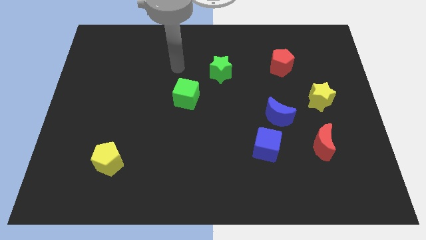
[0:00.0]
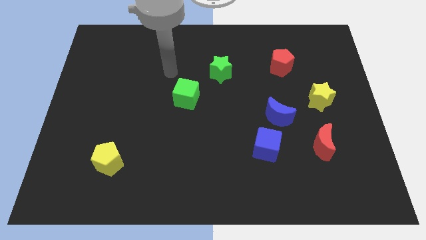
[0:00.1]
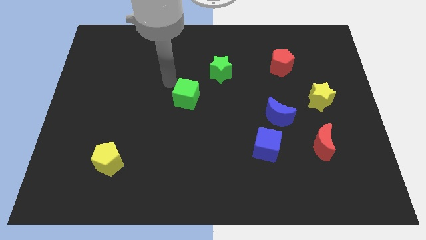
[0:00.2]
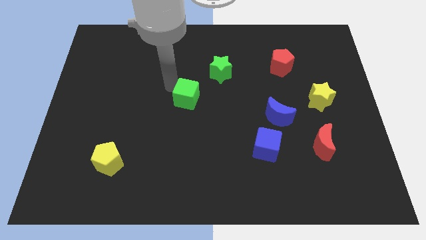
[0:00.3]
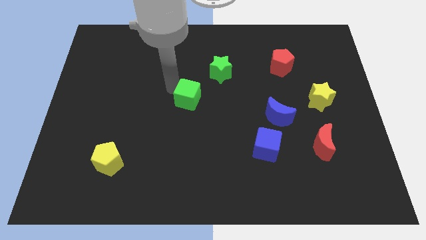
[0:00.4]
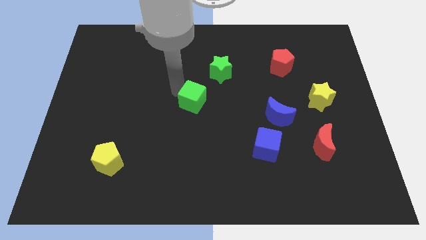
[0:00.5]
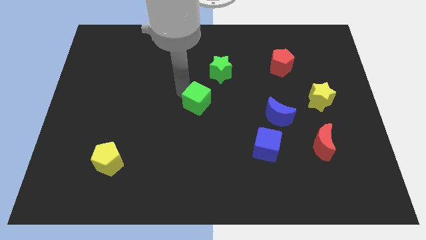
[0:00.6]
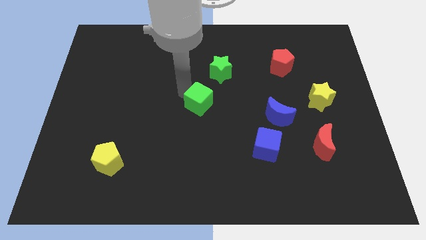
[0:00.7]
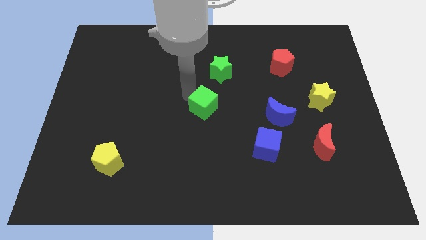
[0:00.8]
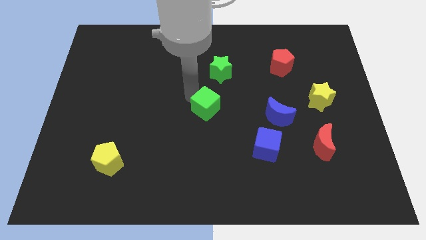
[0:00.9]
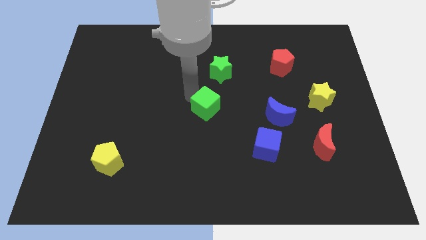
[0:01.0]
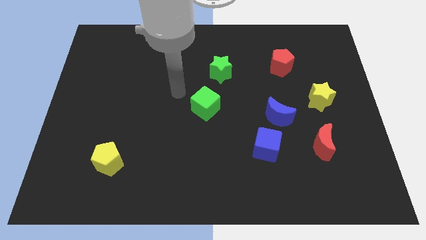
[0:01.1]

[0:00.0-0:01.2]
place the green cube left to the blue moon

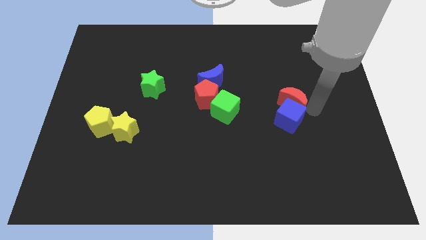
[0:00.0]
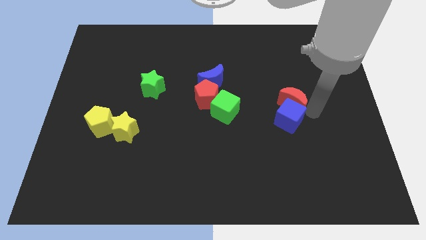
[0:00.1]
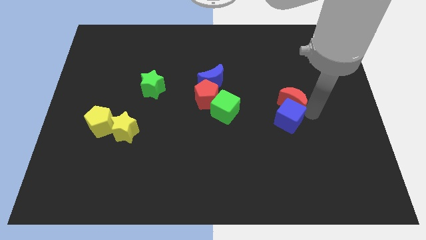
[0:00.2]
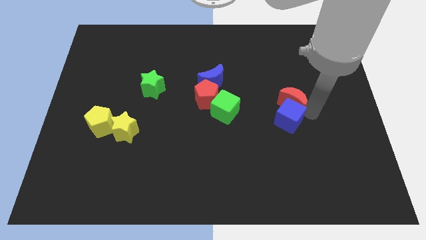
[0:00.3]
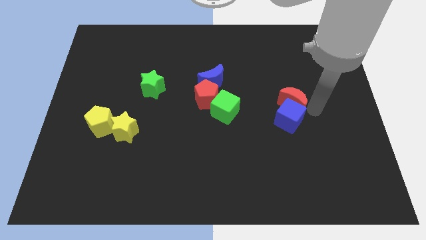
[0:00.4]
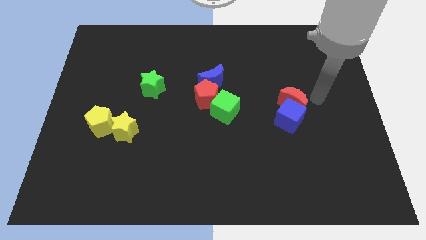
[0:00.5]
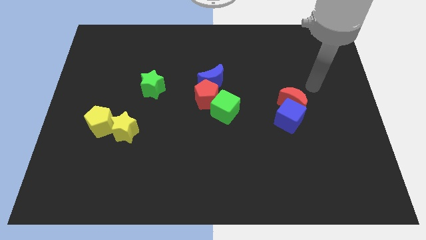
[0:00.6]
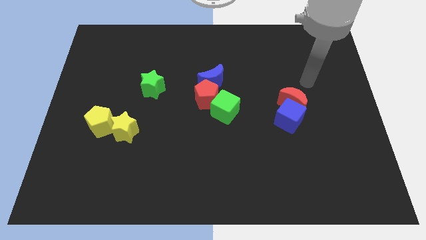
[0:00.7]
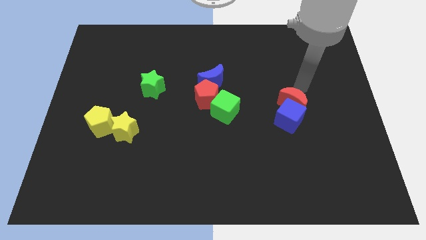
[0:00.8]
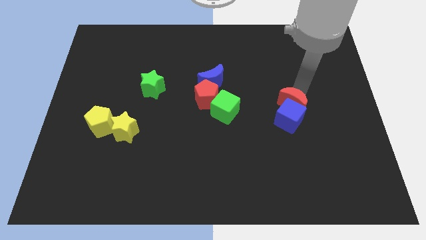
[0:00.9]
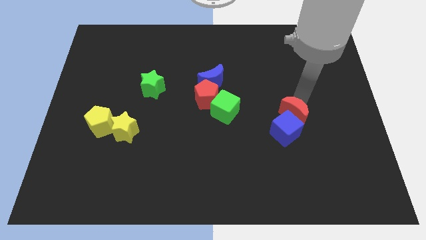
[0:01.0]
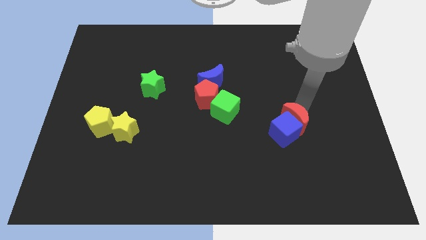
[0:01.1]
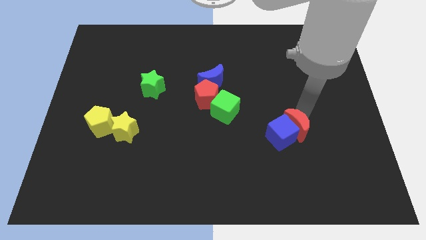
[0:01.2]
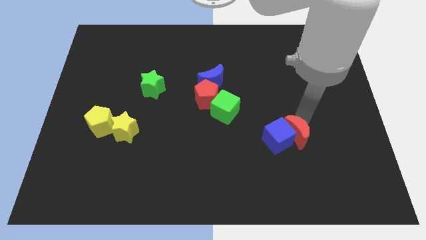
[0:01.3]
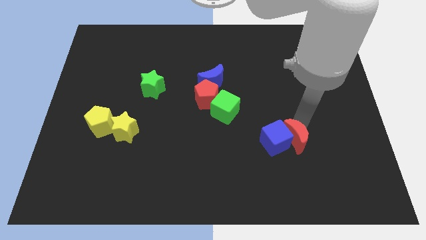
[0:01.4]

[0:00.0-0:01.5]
place the red moon at the right side of the blue cube

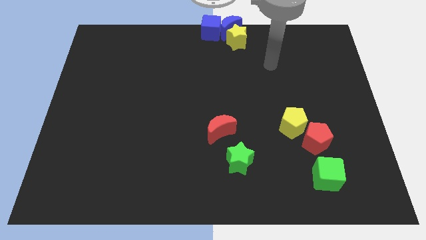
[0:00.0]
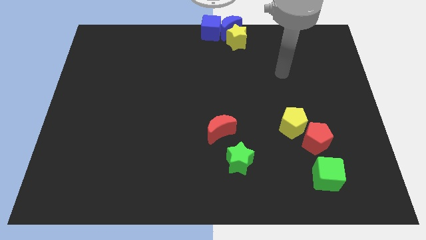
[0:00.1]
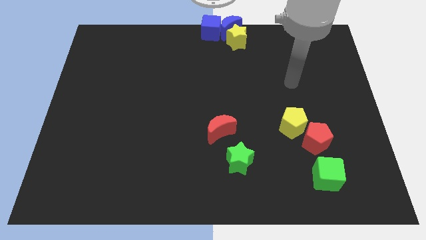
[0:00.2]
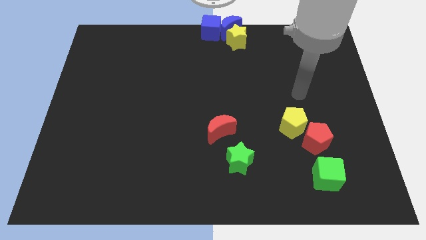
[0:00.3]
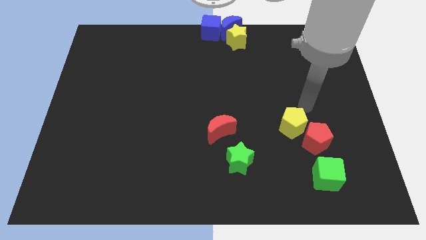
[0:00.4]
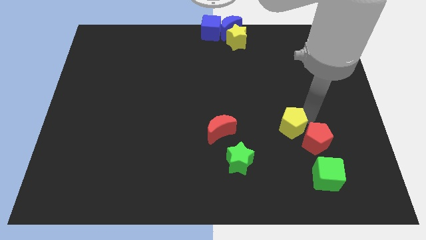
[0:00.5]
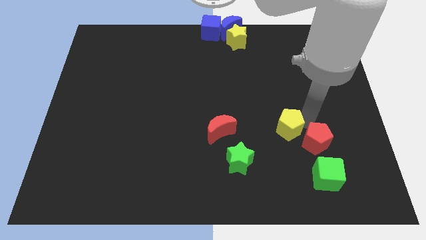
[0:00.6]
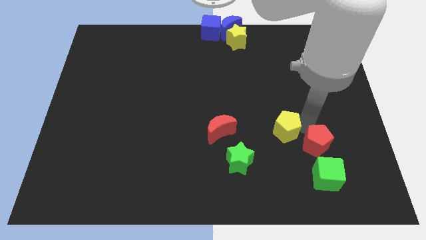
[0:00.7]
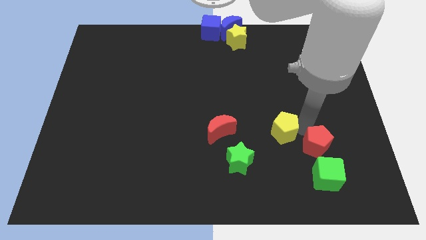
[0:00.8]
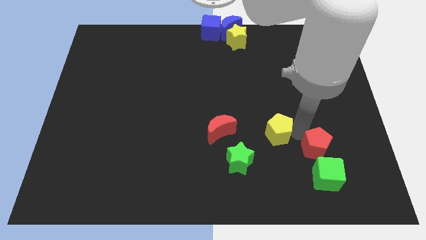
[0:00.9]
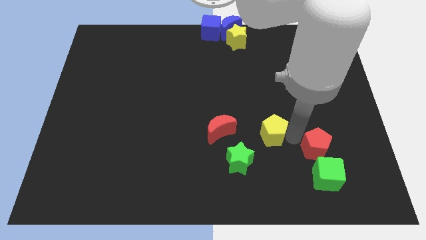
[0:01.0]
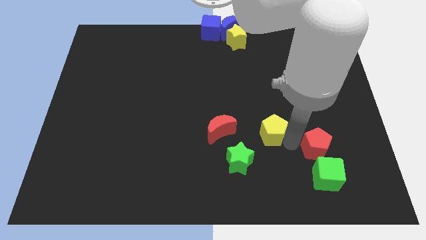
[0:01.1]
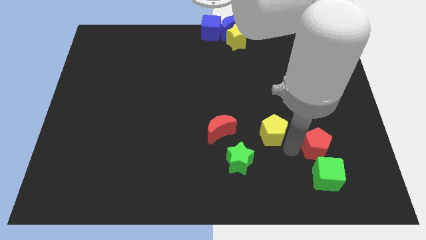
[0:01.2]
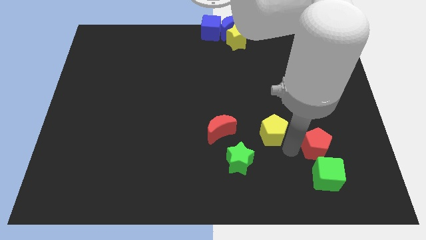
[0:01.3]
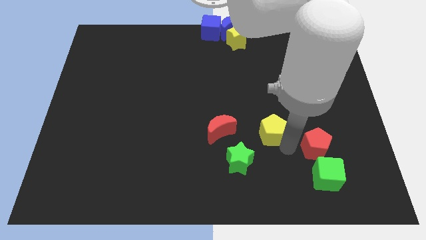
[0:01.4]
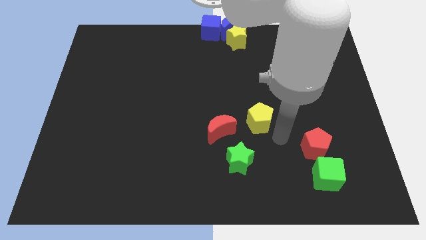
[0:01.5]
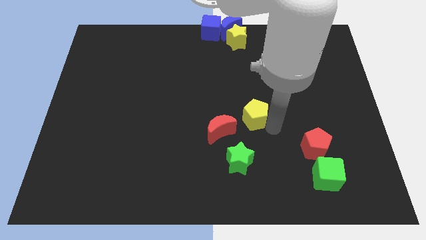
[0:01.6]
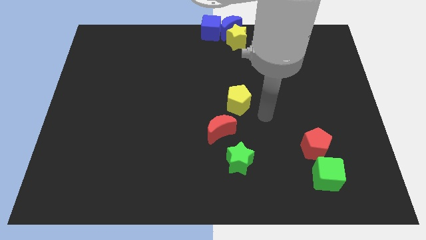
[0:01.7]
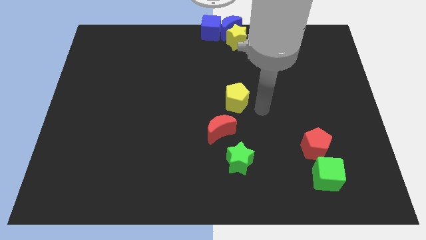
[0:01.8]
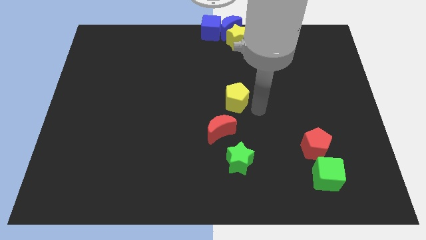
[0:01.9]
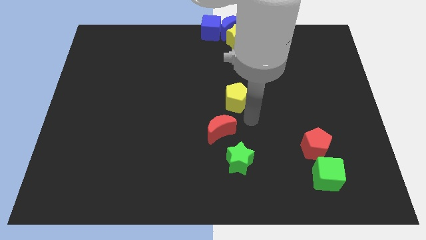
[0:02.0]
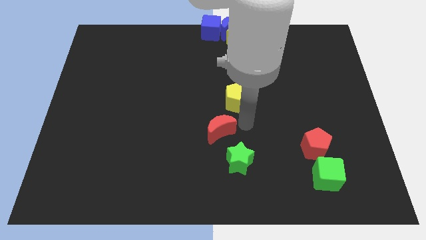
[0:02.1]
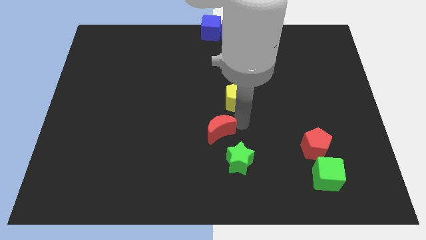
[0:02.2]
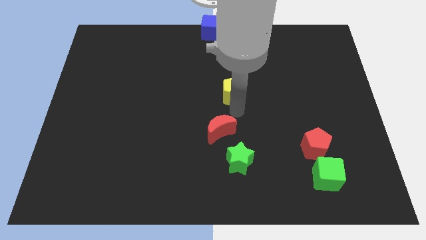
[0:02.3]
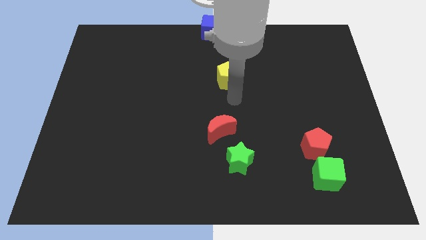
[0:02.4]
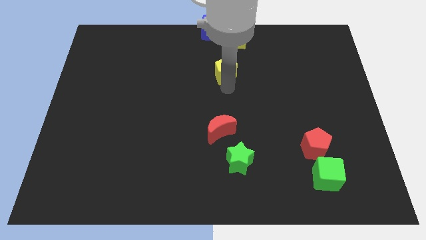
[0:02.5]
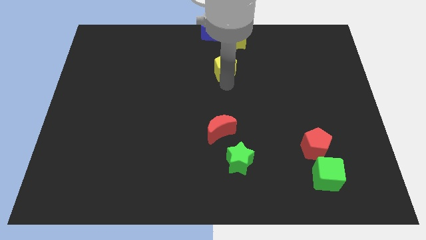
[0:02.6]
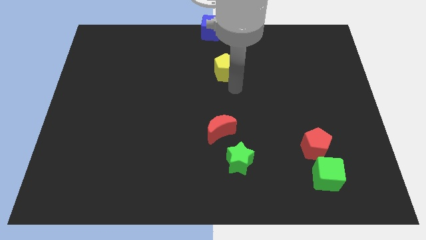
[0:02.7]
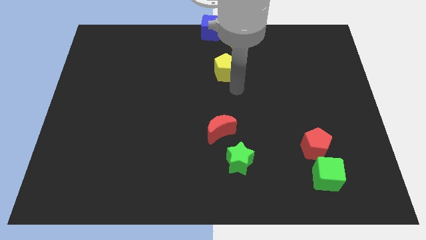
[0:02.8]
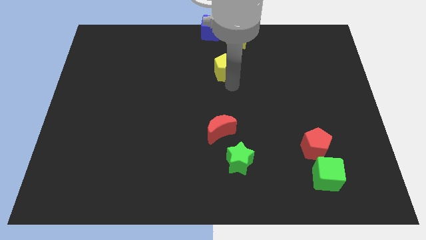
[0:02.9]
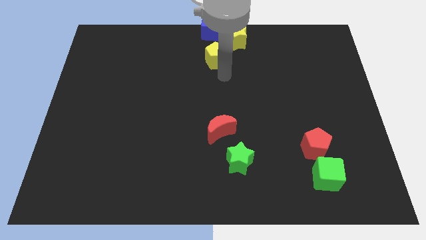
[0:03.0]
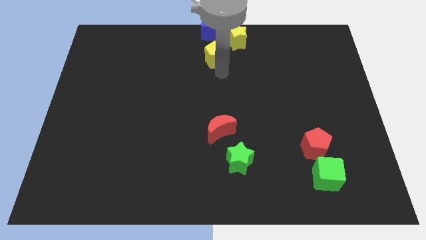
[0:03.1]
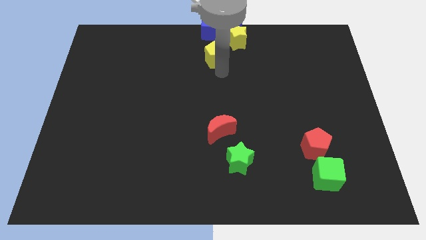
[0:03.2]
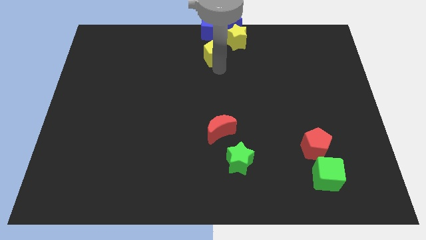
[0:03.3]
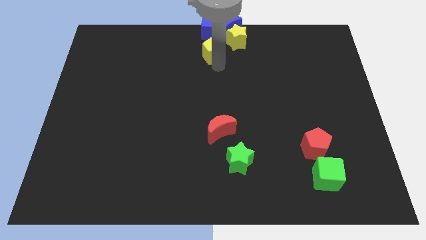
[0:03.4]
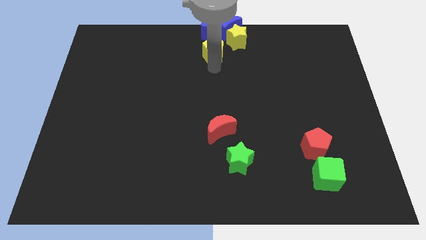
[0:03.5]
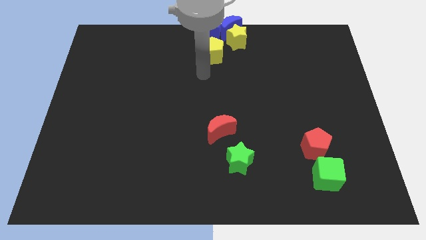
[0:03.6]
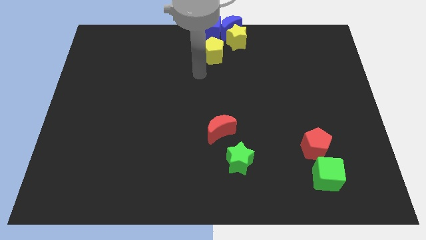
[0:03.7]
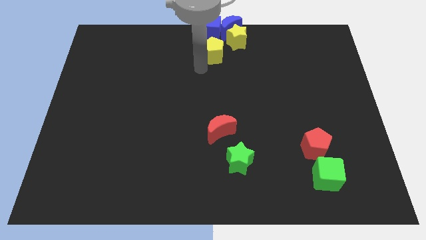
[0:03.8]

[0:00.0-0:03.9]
put the yellow pentagon below the blue cube

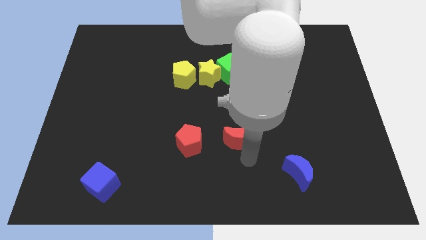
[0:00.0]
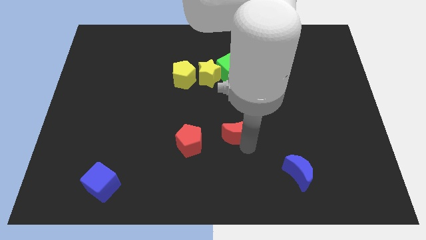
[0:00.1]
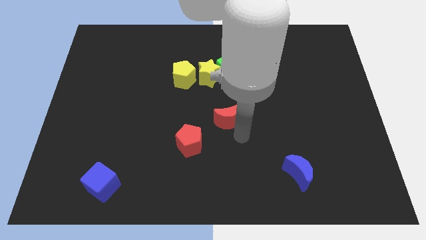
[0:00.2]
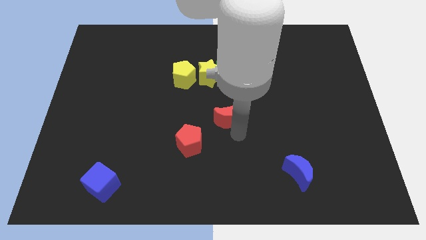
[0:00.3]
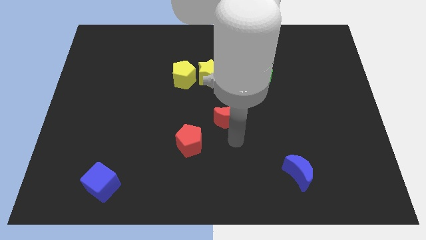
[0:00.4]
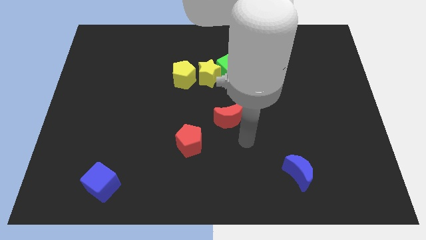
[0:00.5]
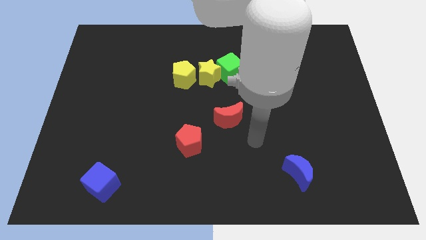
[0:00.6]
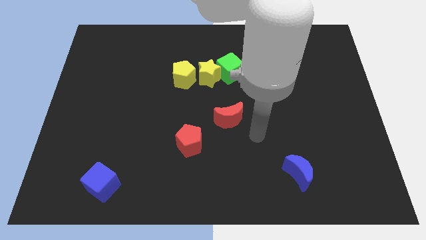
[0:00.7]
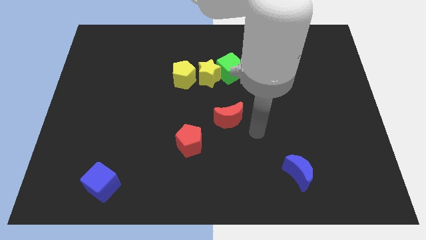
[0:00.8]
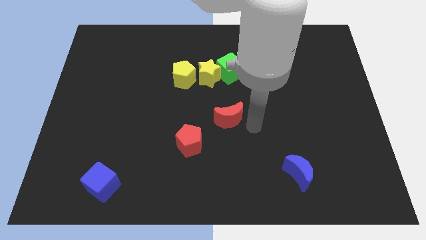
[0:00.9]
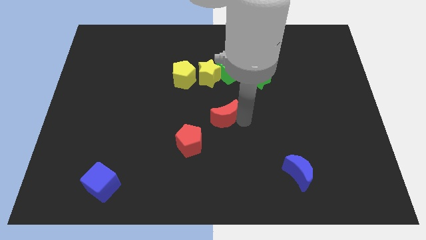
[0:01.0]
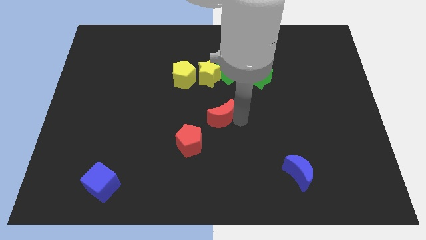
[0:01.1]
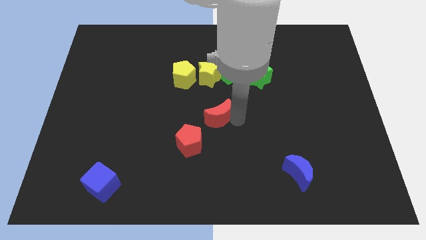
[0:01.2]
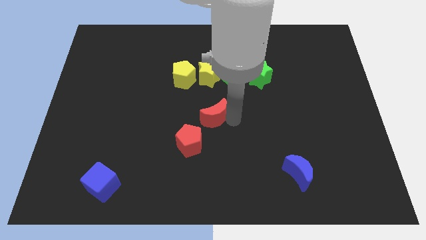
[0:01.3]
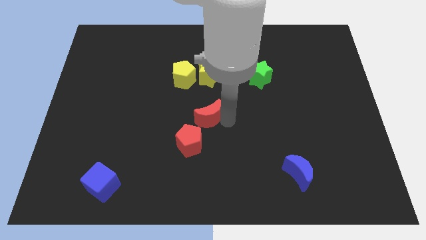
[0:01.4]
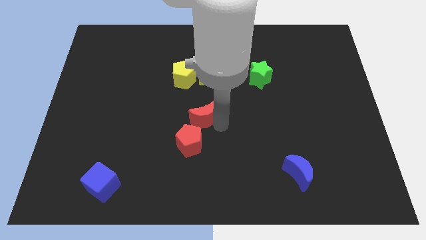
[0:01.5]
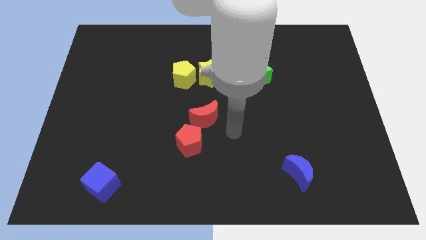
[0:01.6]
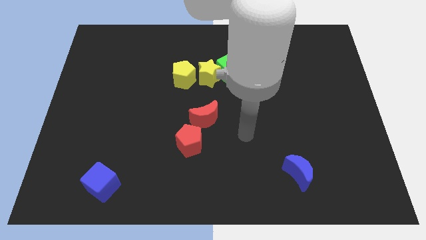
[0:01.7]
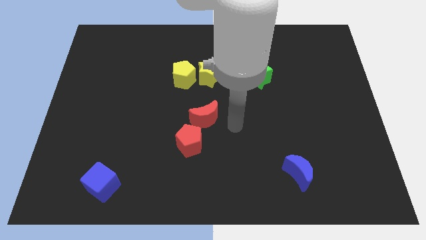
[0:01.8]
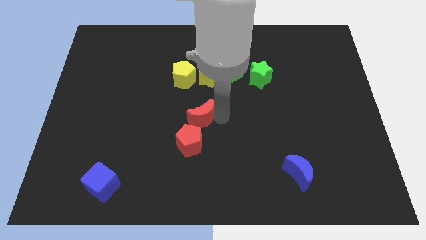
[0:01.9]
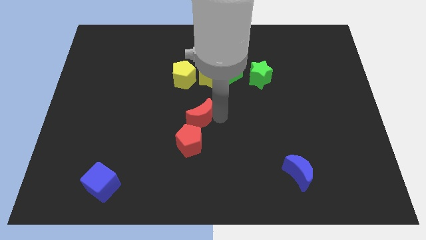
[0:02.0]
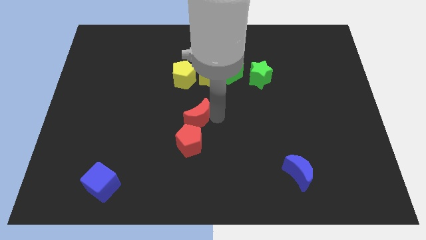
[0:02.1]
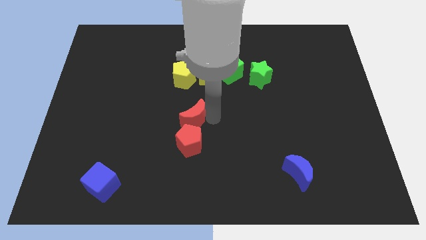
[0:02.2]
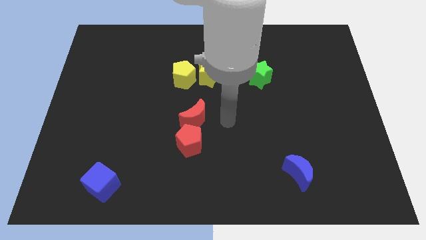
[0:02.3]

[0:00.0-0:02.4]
push the red crescent to the top of the red pentagon
